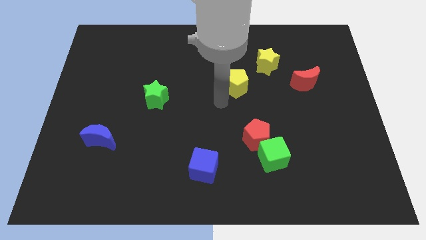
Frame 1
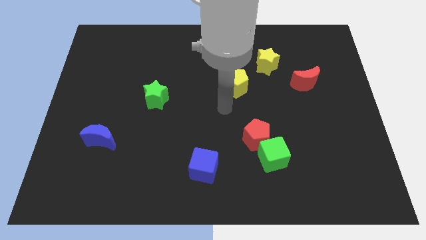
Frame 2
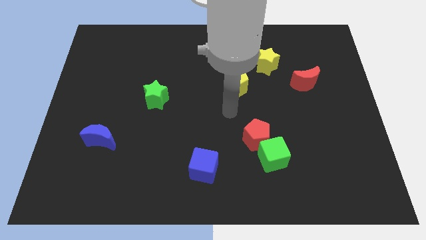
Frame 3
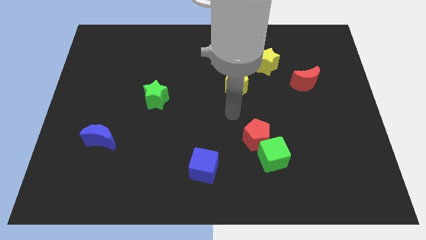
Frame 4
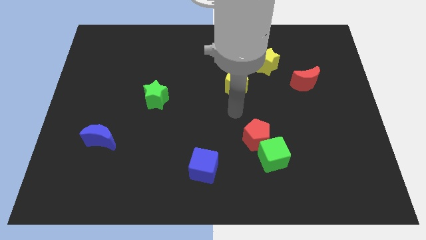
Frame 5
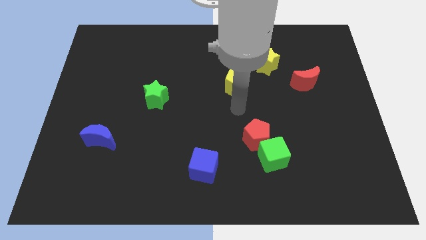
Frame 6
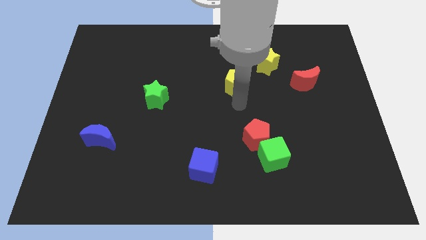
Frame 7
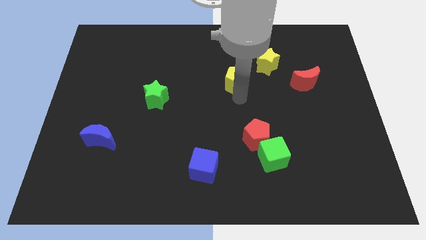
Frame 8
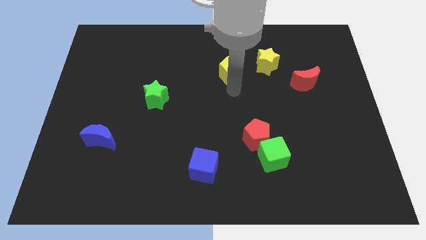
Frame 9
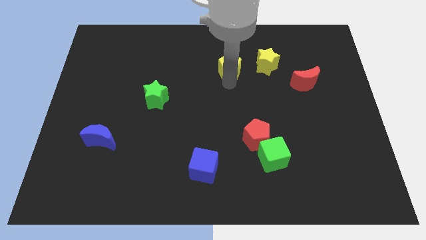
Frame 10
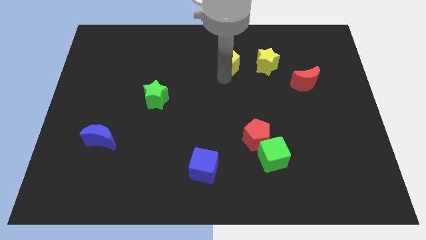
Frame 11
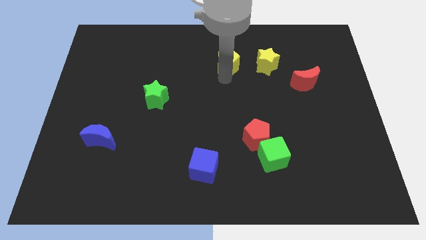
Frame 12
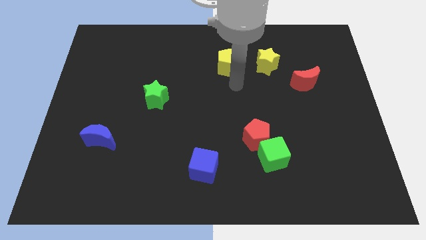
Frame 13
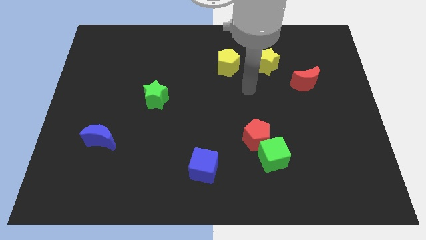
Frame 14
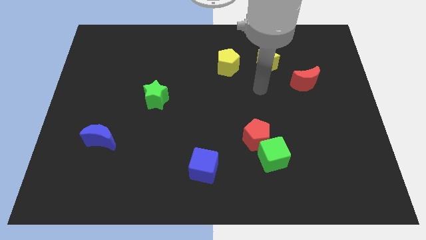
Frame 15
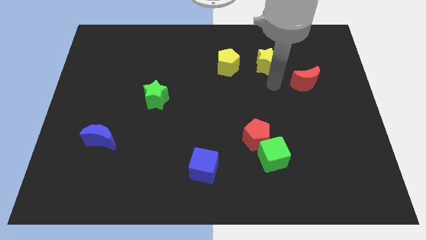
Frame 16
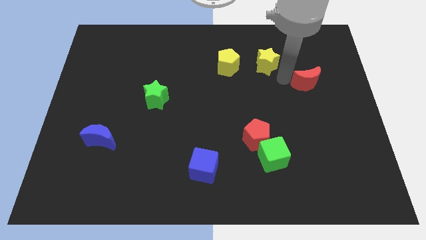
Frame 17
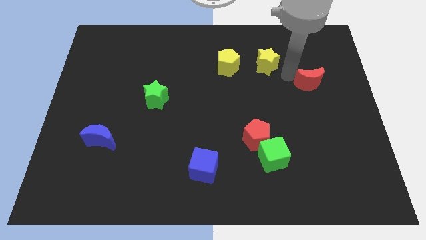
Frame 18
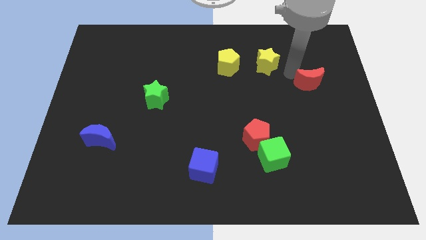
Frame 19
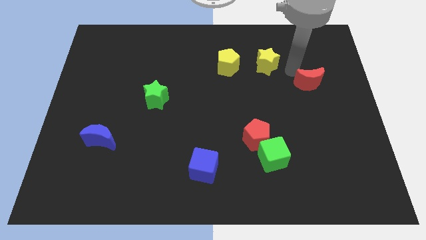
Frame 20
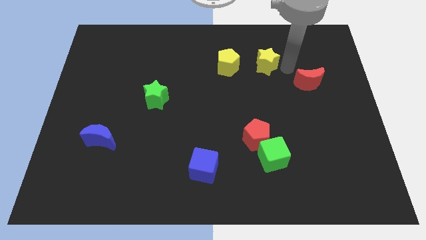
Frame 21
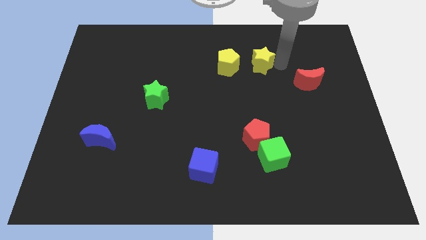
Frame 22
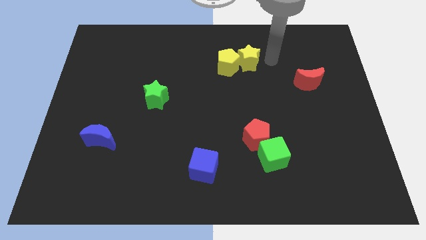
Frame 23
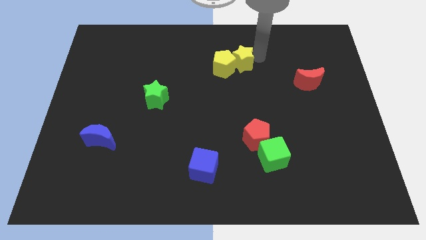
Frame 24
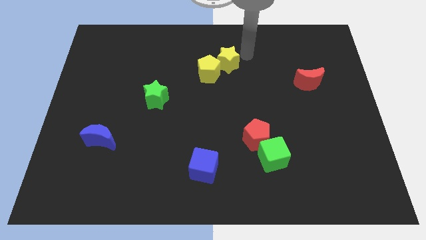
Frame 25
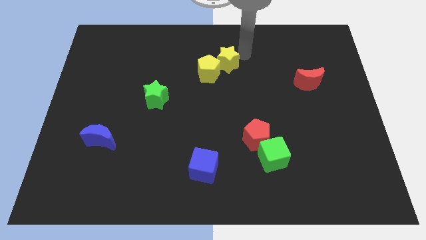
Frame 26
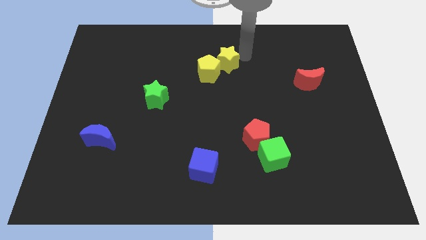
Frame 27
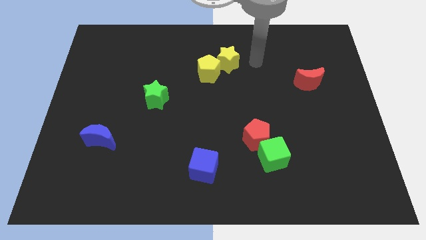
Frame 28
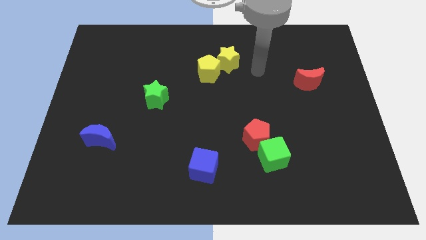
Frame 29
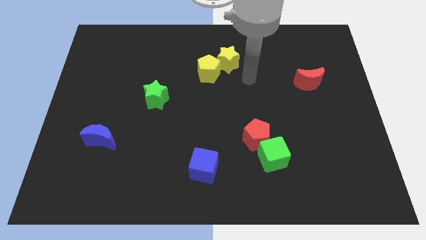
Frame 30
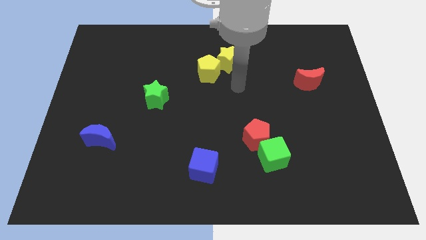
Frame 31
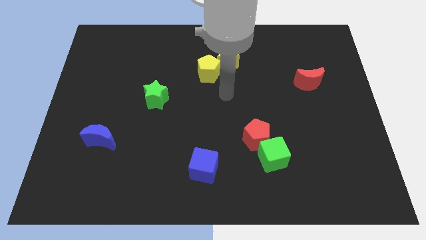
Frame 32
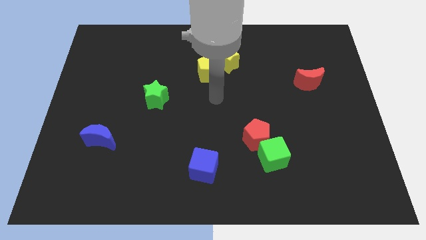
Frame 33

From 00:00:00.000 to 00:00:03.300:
move the group of yellow blocks to the left

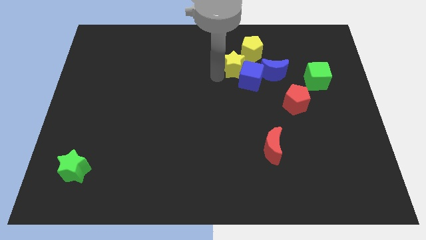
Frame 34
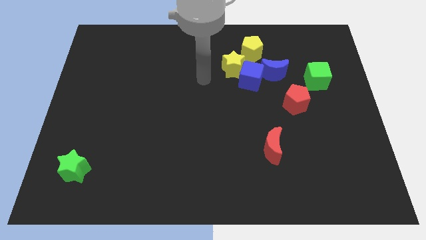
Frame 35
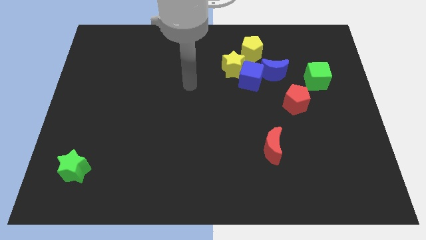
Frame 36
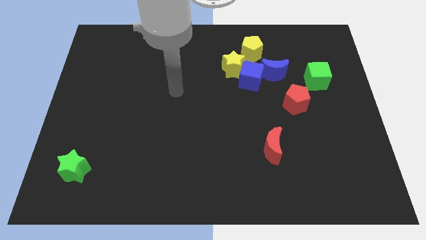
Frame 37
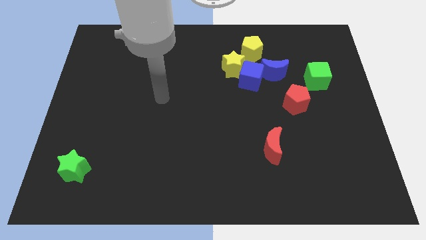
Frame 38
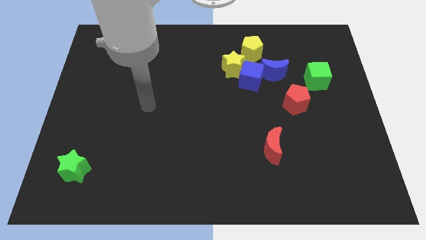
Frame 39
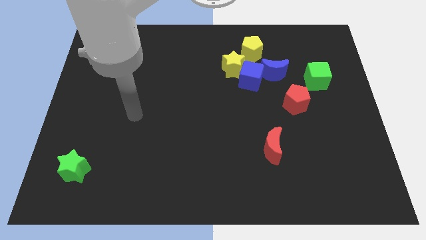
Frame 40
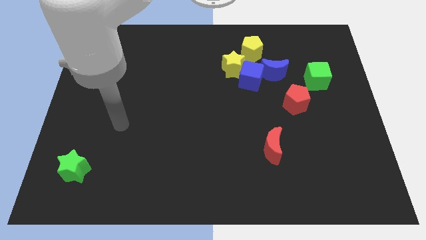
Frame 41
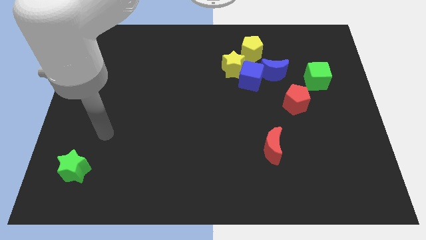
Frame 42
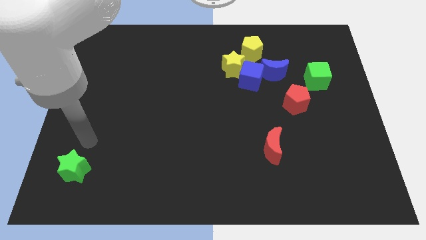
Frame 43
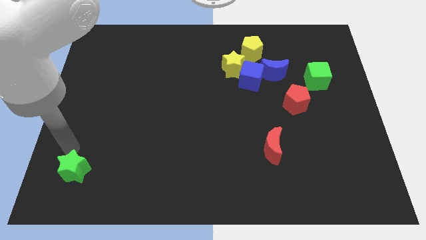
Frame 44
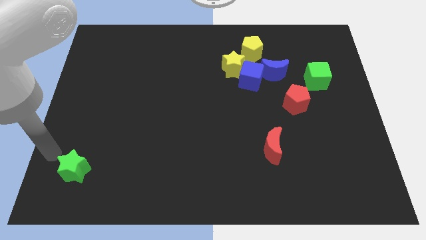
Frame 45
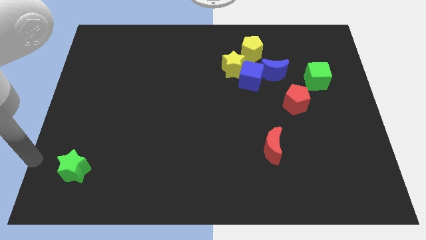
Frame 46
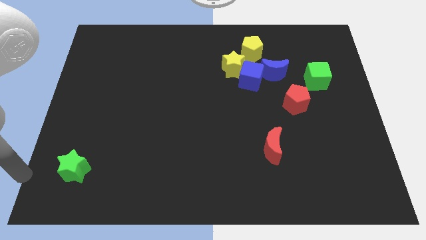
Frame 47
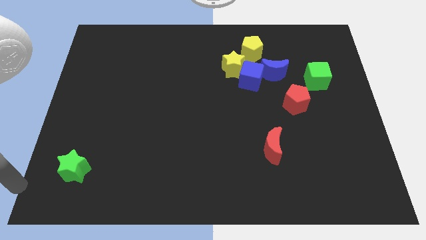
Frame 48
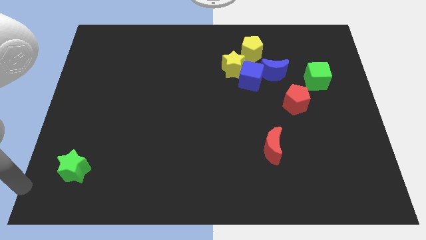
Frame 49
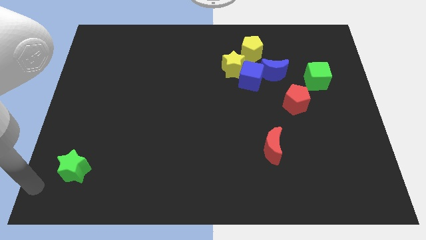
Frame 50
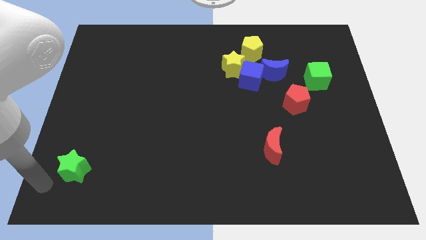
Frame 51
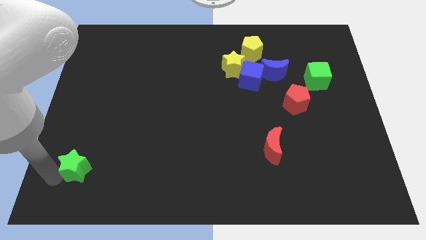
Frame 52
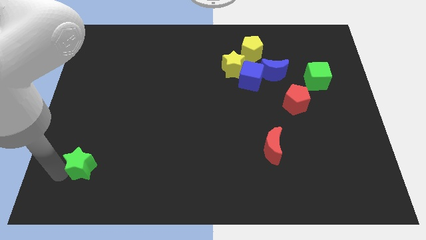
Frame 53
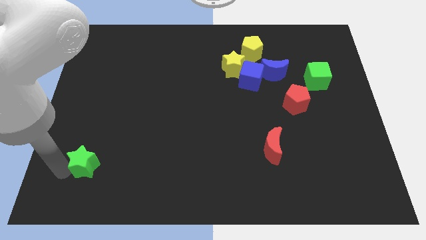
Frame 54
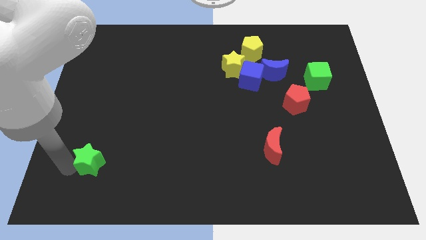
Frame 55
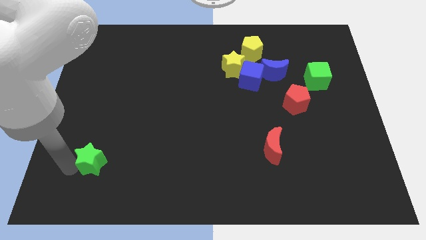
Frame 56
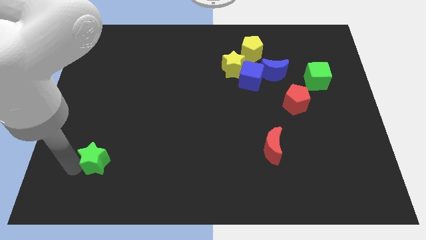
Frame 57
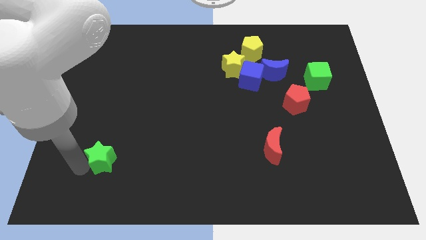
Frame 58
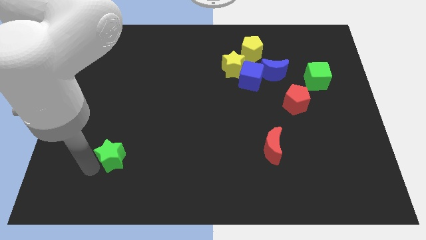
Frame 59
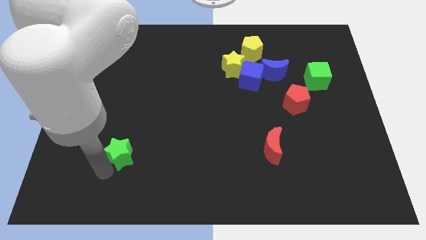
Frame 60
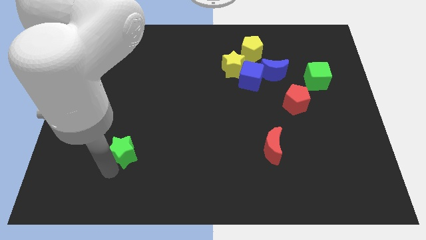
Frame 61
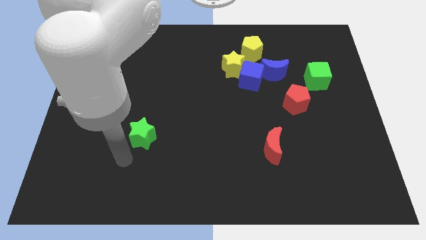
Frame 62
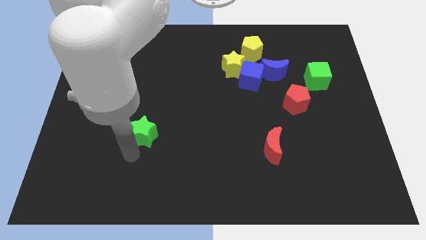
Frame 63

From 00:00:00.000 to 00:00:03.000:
move the green star to the center of the board

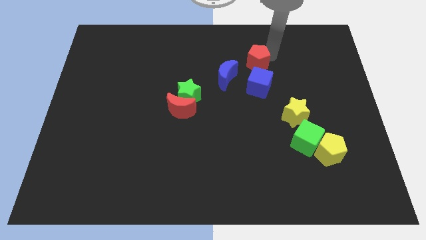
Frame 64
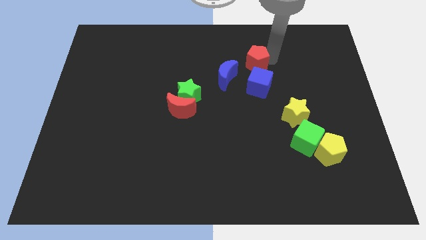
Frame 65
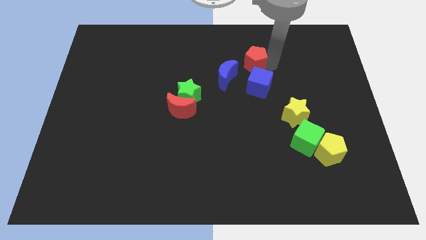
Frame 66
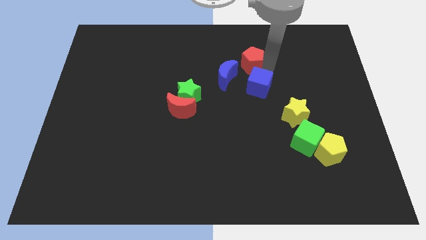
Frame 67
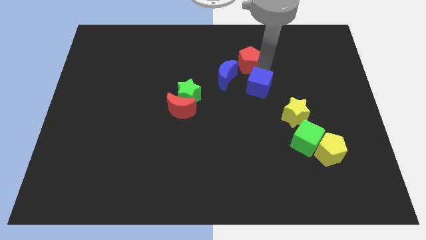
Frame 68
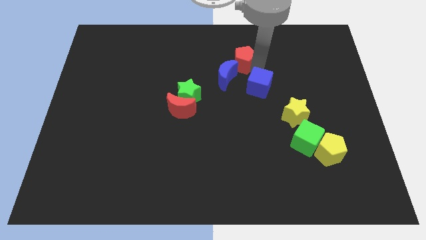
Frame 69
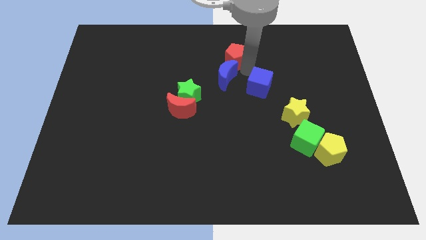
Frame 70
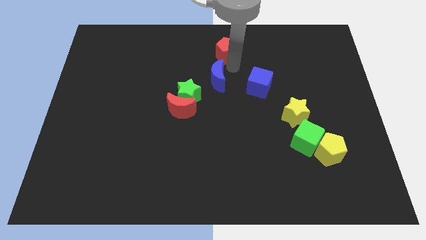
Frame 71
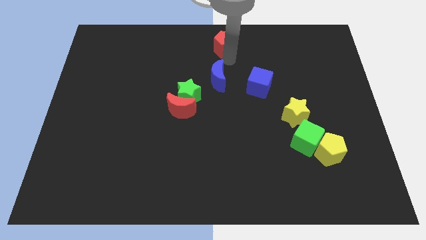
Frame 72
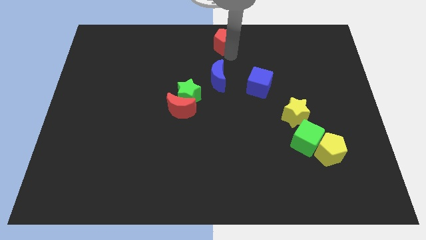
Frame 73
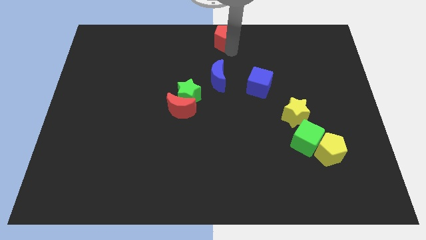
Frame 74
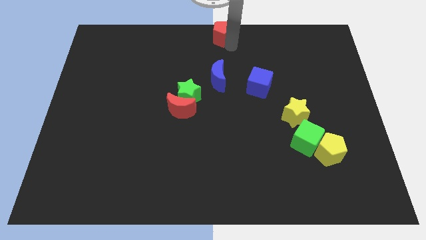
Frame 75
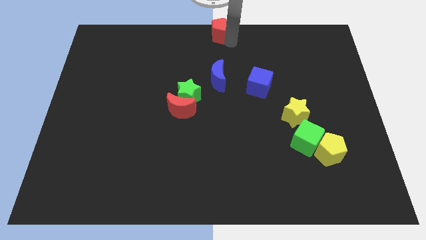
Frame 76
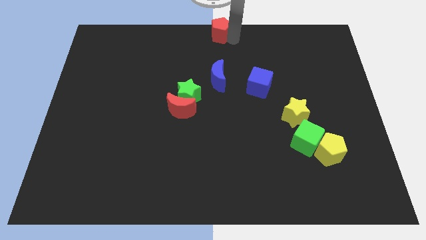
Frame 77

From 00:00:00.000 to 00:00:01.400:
move the red pentagon to the top center of the board

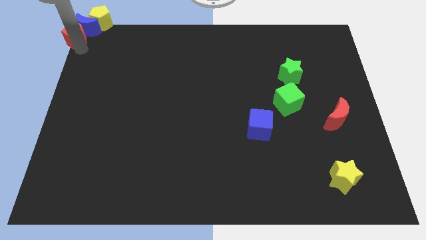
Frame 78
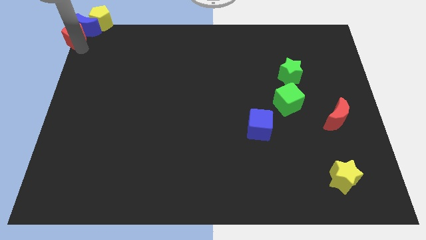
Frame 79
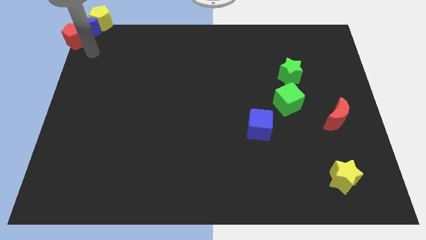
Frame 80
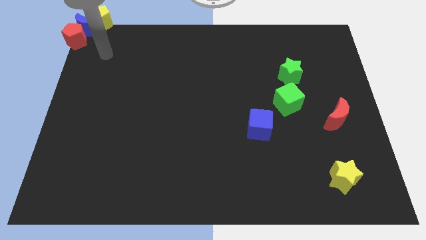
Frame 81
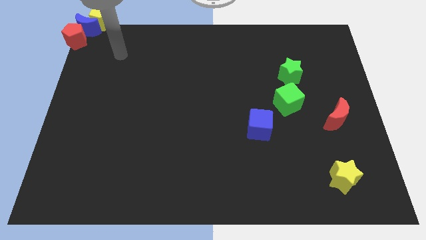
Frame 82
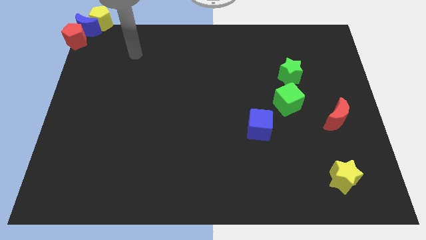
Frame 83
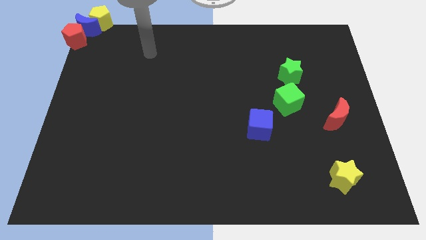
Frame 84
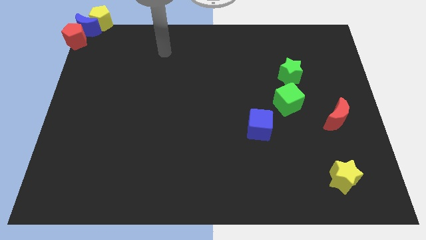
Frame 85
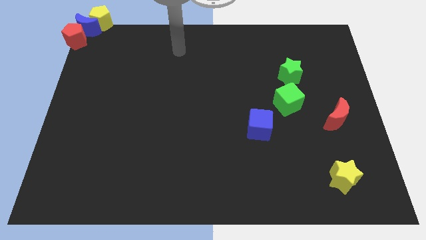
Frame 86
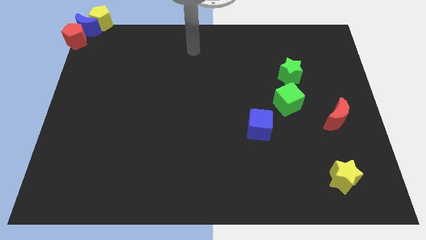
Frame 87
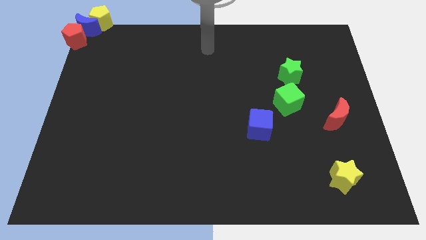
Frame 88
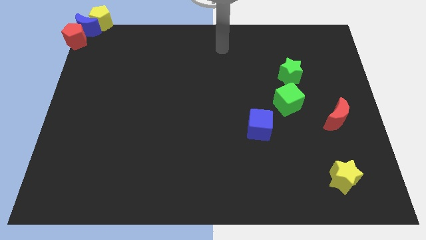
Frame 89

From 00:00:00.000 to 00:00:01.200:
move your hand away from the red pentagon
